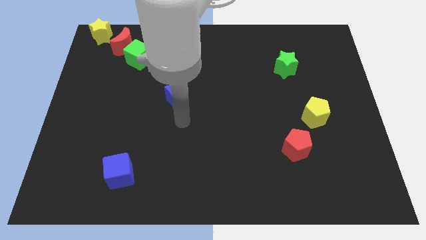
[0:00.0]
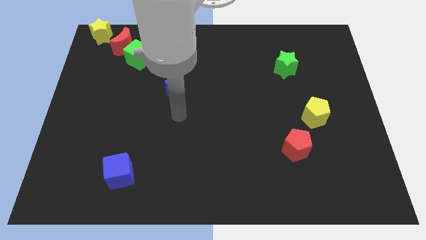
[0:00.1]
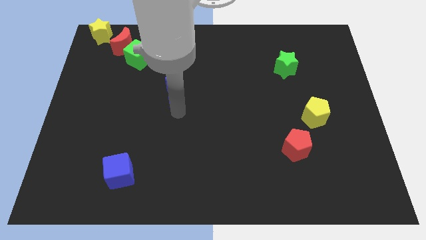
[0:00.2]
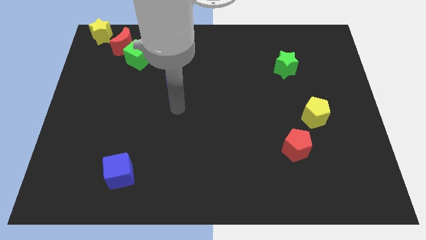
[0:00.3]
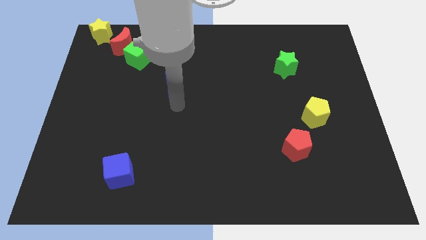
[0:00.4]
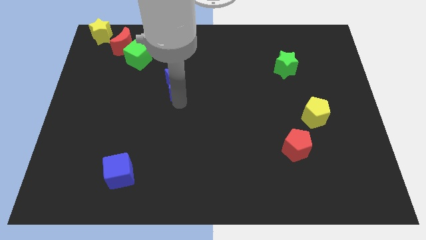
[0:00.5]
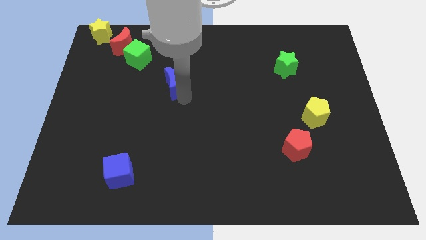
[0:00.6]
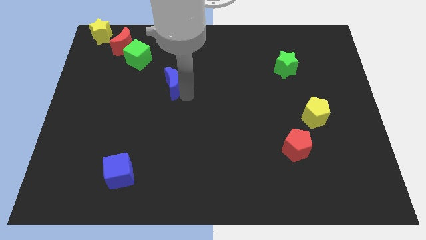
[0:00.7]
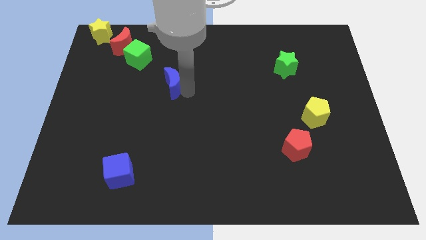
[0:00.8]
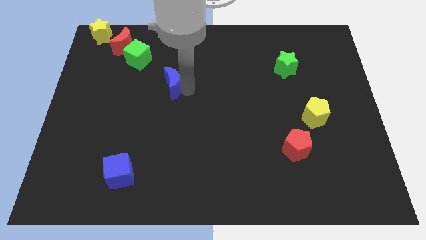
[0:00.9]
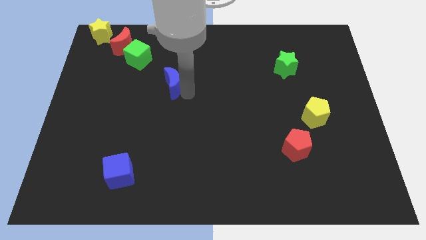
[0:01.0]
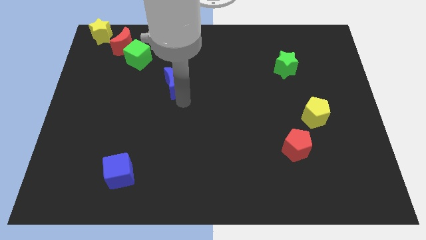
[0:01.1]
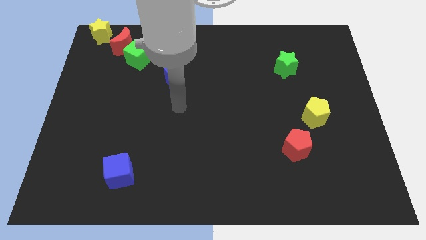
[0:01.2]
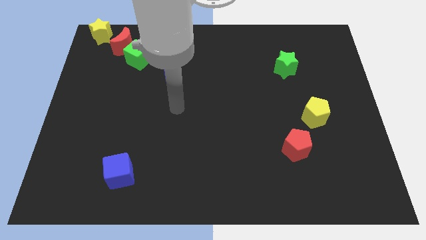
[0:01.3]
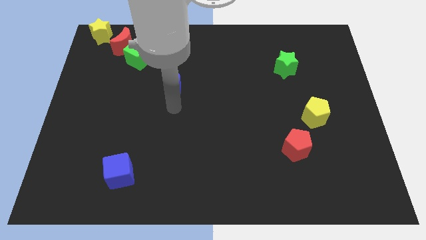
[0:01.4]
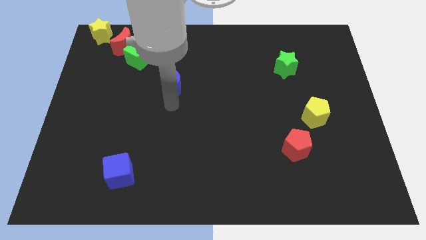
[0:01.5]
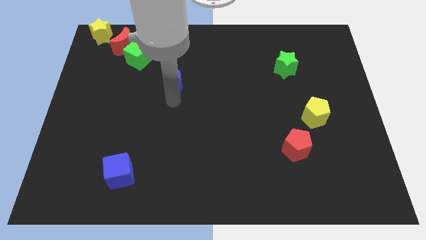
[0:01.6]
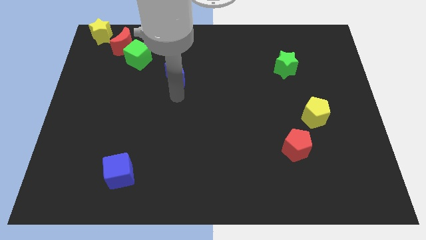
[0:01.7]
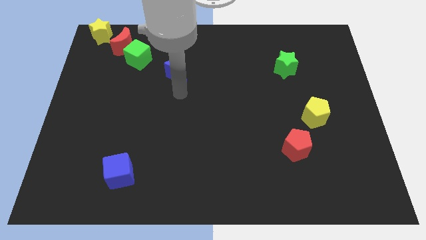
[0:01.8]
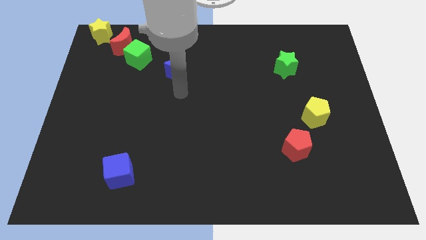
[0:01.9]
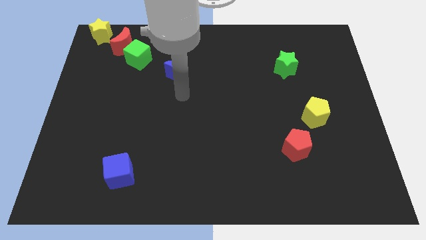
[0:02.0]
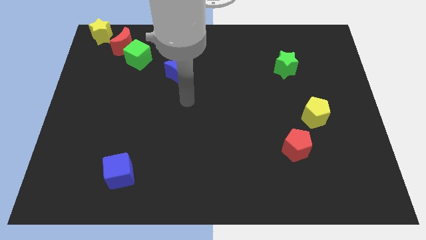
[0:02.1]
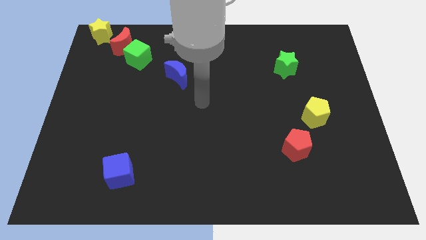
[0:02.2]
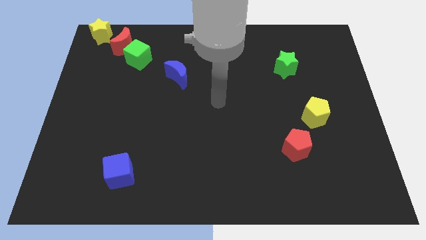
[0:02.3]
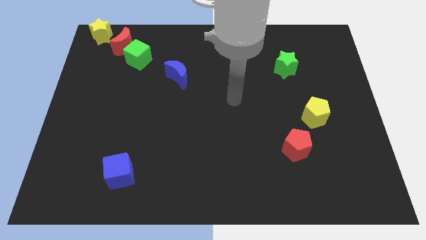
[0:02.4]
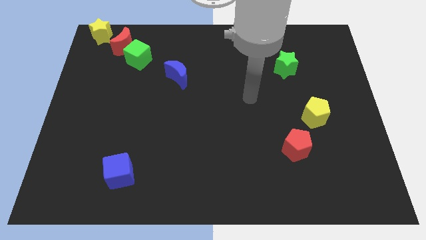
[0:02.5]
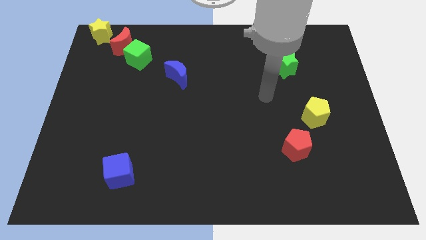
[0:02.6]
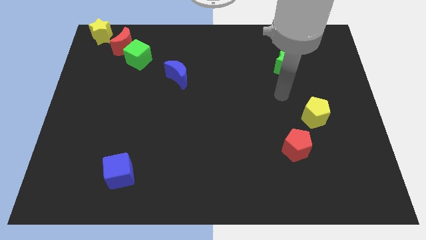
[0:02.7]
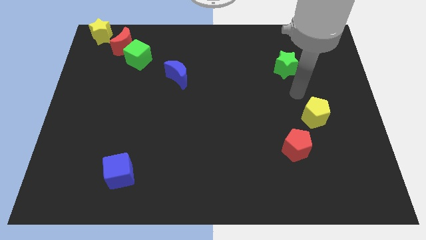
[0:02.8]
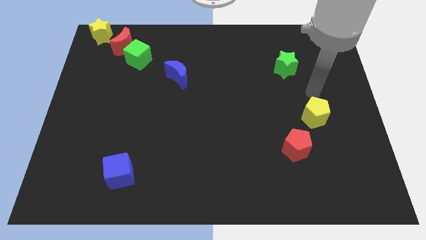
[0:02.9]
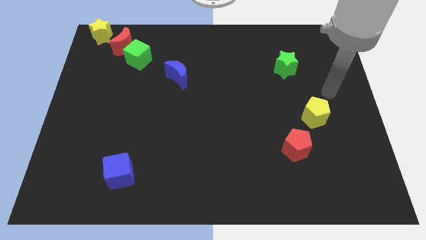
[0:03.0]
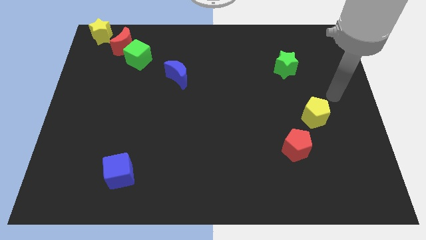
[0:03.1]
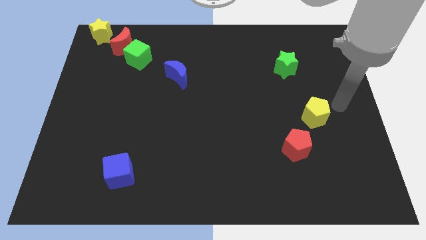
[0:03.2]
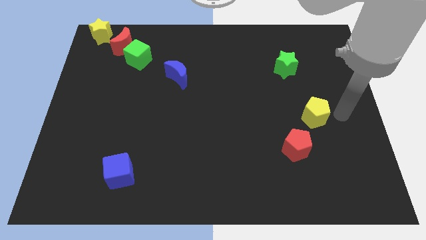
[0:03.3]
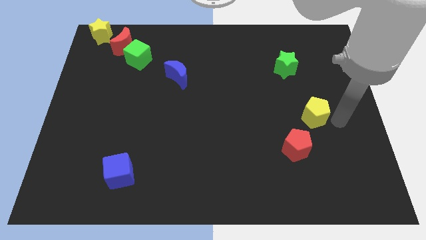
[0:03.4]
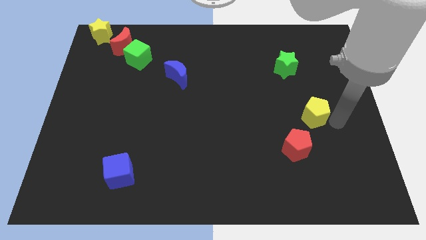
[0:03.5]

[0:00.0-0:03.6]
slightly move the blue crescent below to the green cube

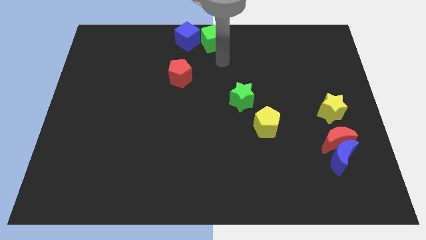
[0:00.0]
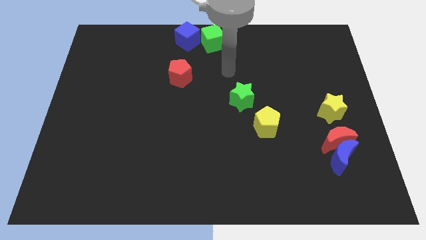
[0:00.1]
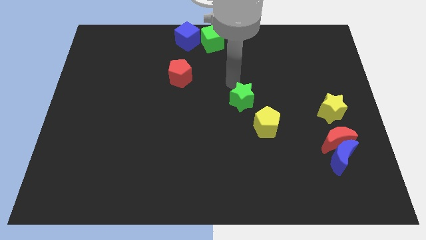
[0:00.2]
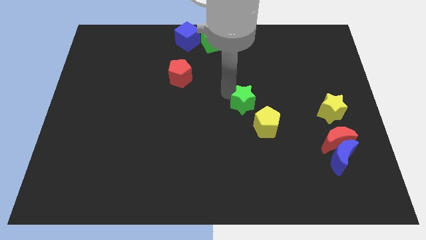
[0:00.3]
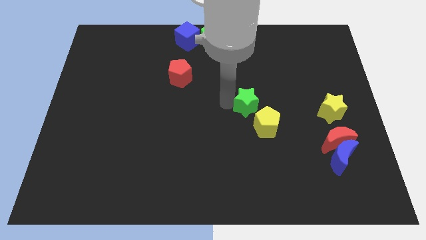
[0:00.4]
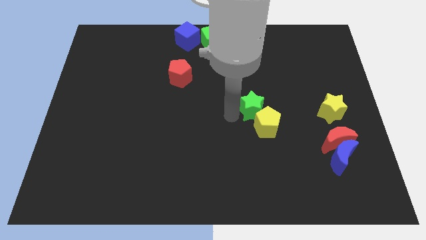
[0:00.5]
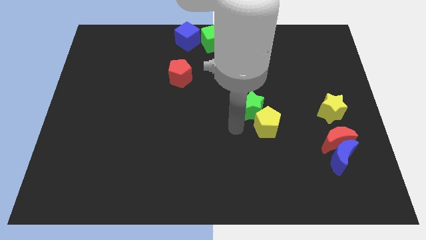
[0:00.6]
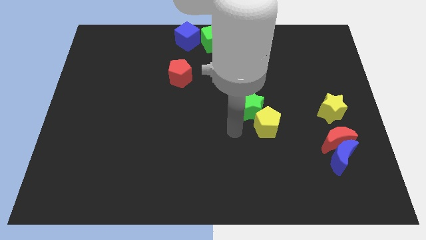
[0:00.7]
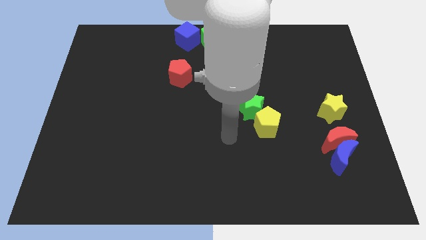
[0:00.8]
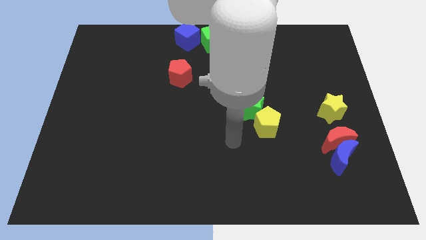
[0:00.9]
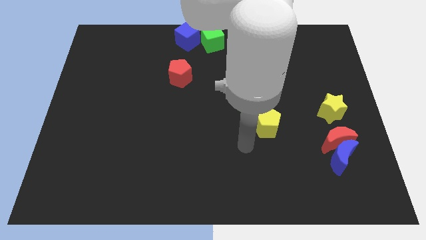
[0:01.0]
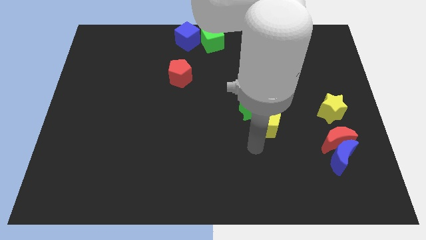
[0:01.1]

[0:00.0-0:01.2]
move the green star to the top left to the yellow pentagon

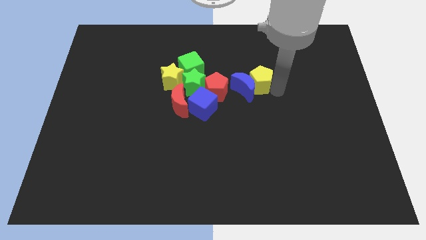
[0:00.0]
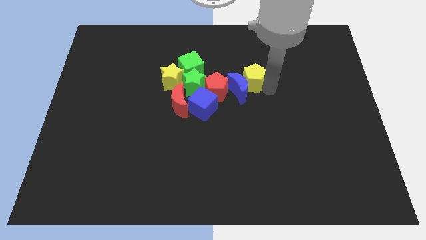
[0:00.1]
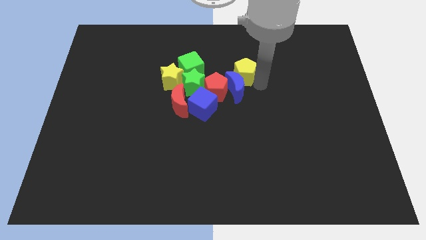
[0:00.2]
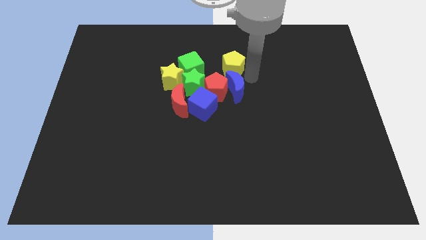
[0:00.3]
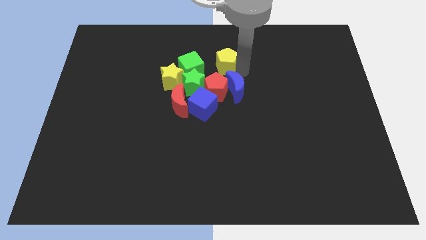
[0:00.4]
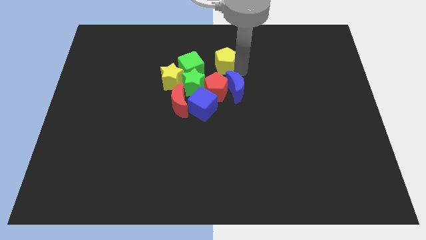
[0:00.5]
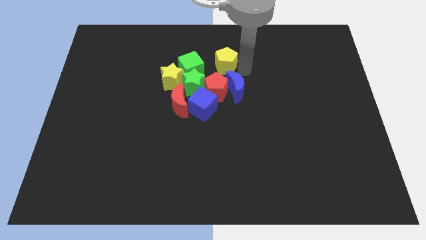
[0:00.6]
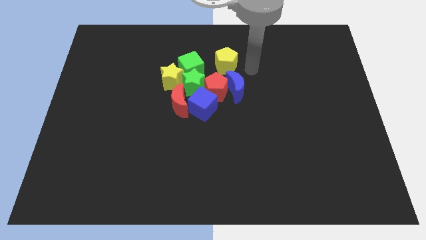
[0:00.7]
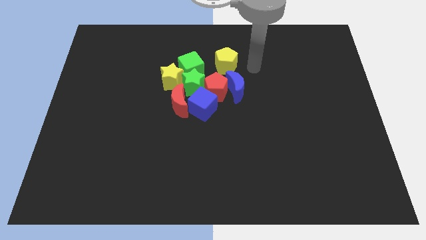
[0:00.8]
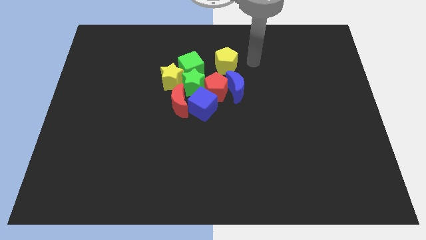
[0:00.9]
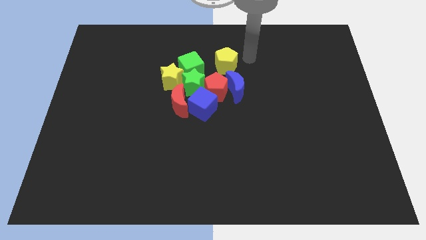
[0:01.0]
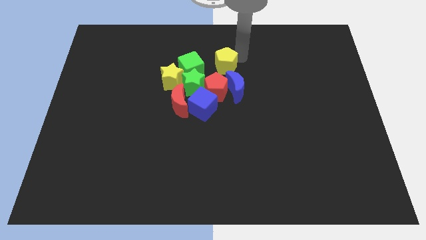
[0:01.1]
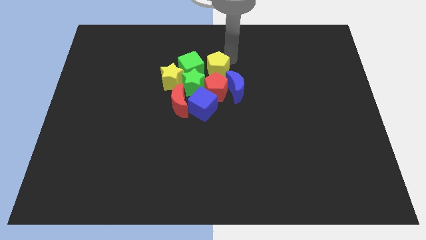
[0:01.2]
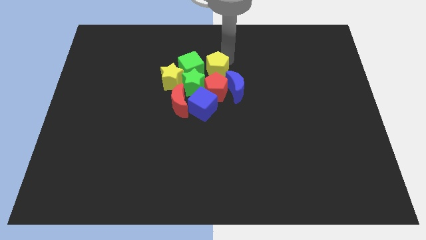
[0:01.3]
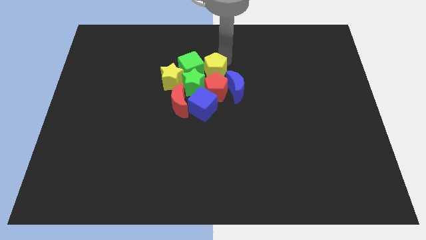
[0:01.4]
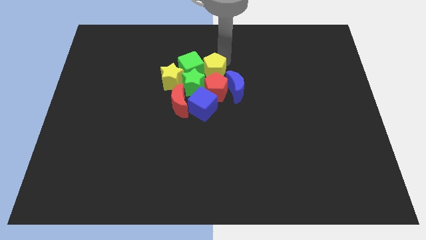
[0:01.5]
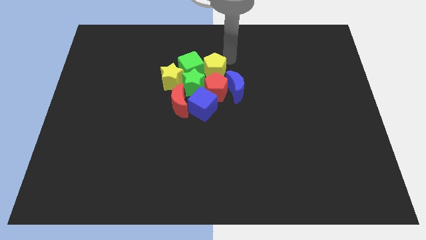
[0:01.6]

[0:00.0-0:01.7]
move the yellow pentagon above to the red pentagon

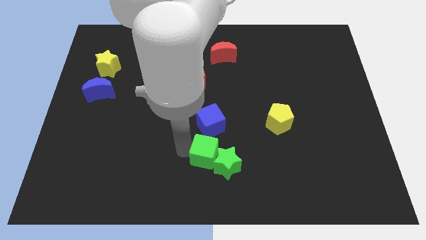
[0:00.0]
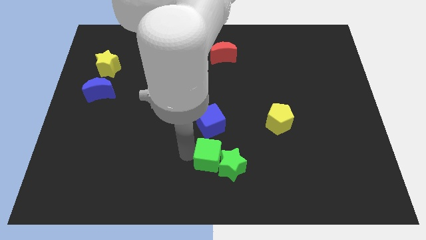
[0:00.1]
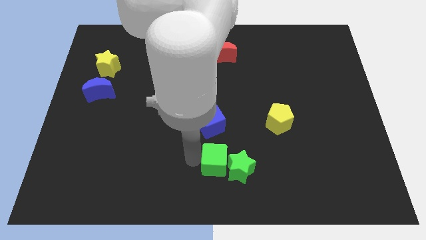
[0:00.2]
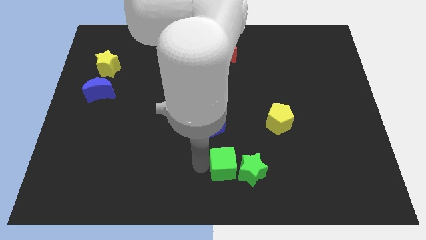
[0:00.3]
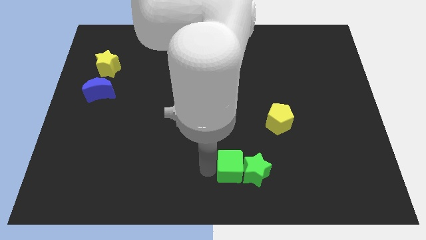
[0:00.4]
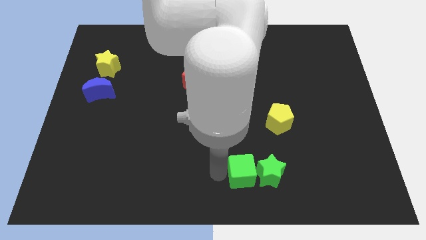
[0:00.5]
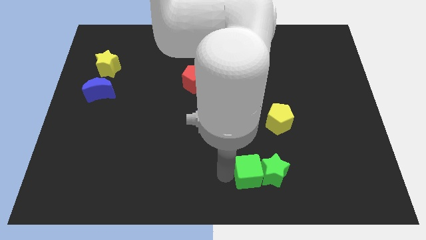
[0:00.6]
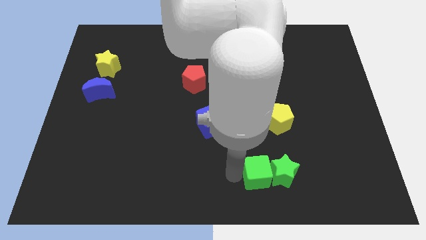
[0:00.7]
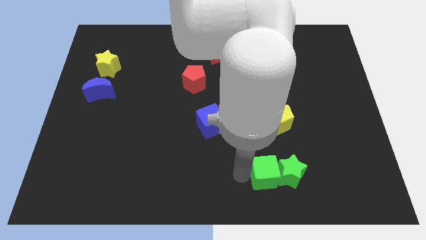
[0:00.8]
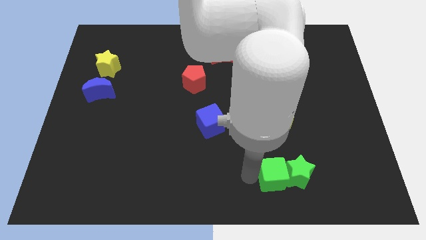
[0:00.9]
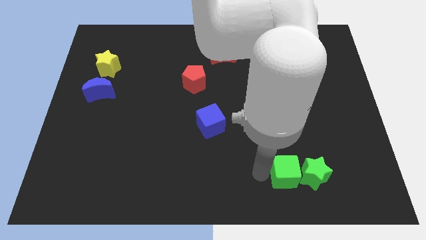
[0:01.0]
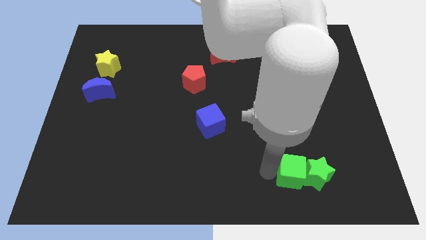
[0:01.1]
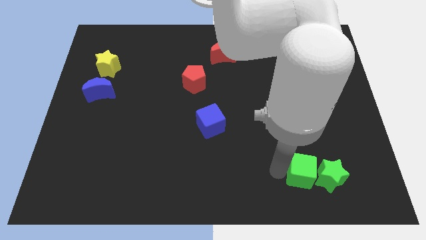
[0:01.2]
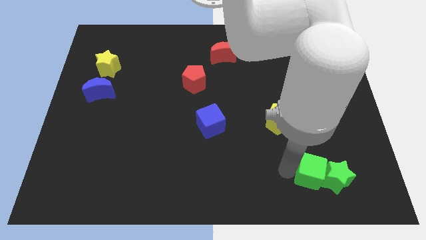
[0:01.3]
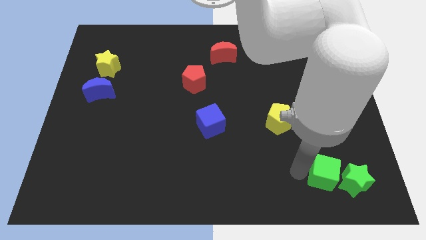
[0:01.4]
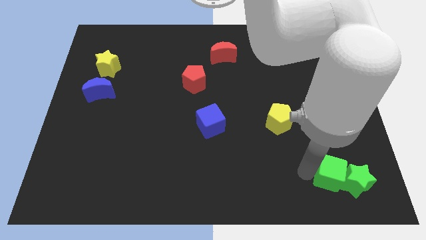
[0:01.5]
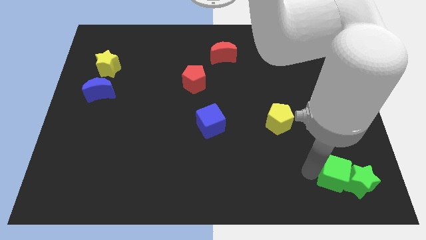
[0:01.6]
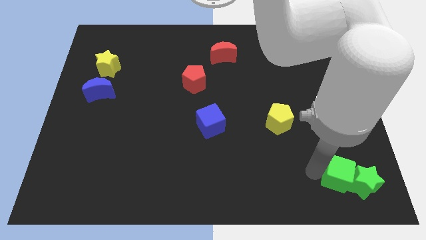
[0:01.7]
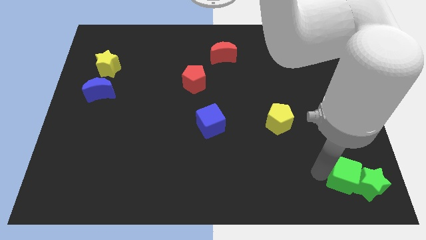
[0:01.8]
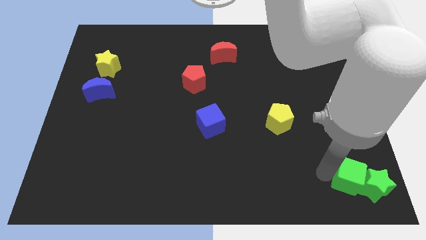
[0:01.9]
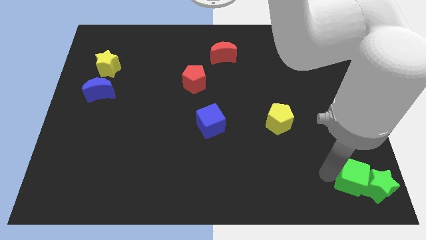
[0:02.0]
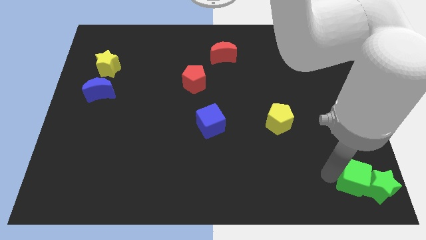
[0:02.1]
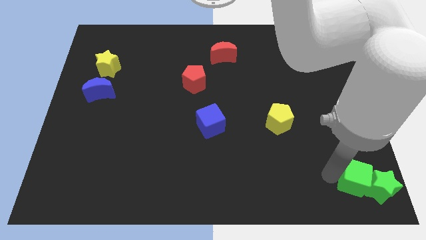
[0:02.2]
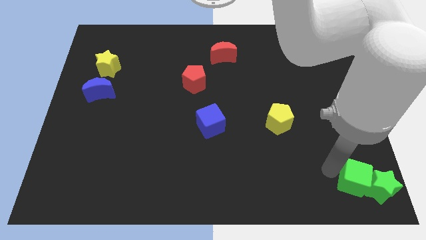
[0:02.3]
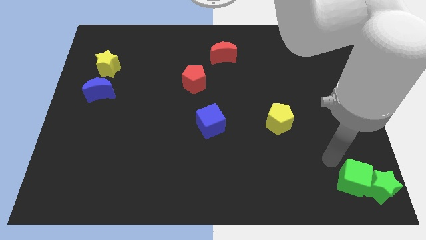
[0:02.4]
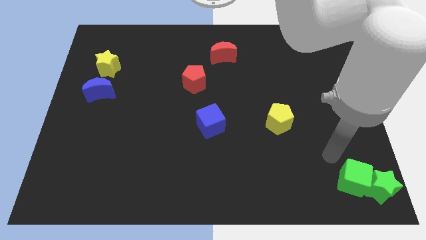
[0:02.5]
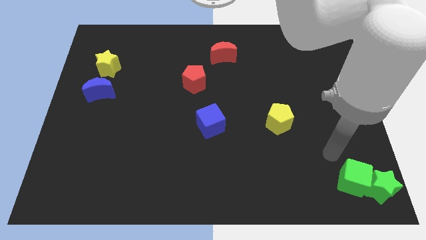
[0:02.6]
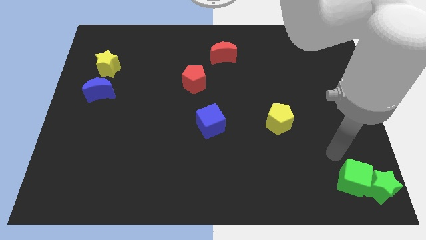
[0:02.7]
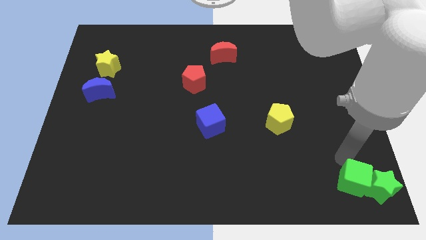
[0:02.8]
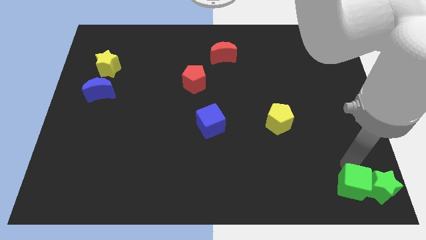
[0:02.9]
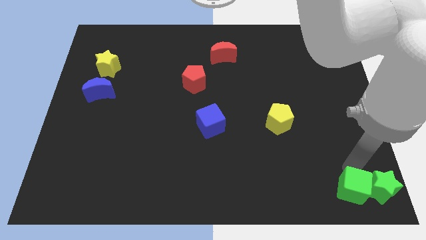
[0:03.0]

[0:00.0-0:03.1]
push the green cube along the green star to the bottom right to the board
